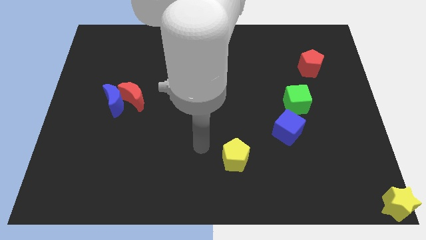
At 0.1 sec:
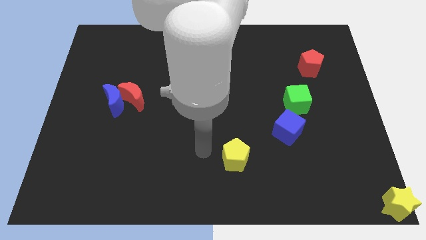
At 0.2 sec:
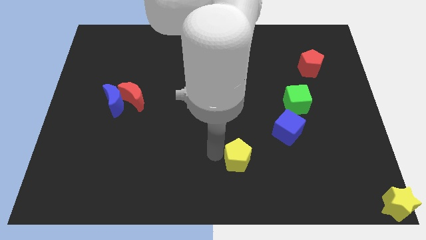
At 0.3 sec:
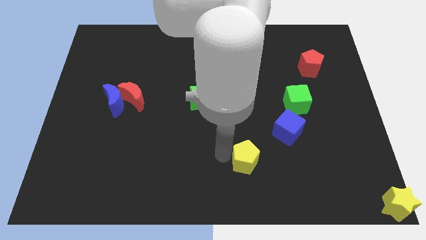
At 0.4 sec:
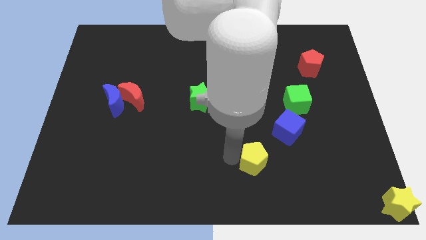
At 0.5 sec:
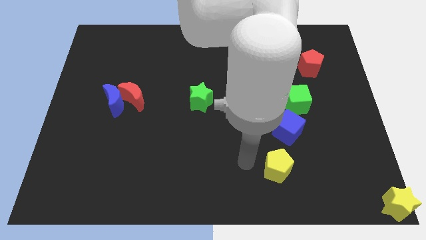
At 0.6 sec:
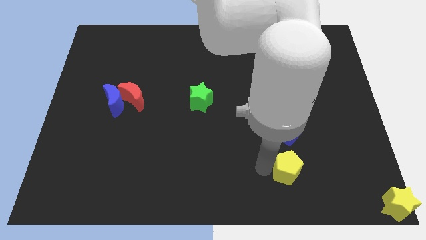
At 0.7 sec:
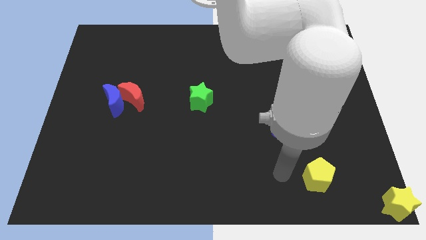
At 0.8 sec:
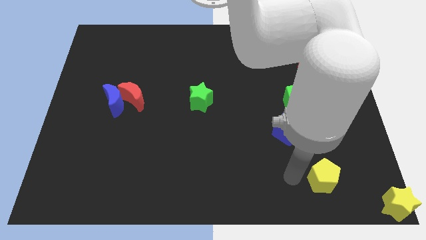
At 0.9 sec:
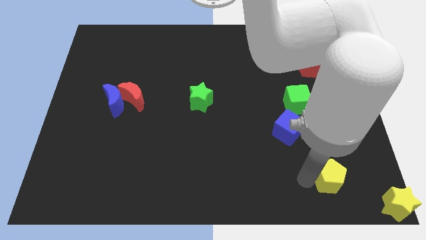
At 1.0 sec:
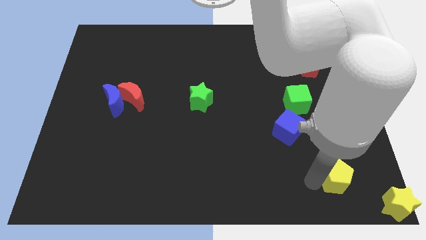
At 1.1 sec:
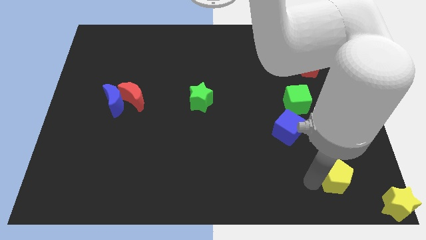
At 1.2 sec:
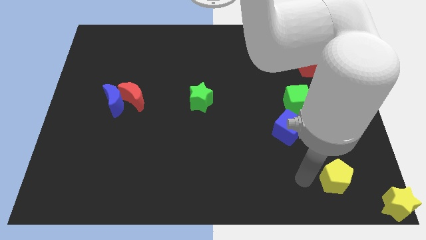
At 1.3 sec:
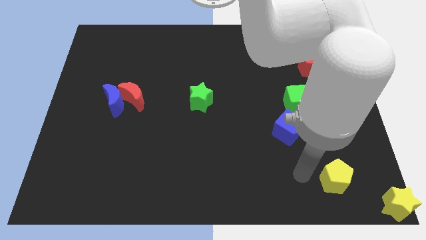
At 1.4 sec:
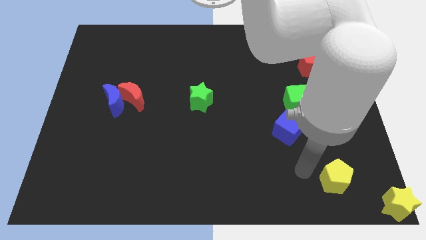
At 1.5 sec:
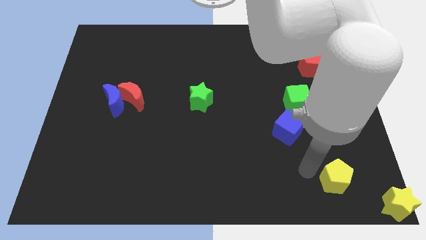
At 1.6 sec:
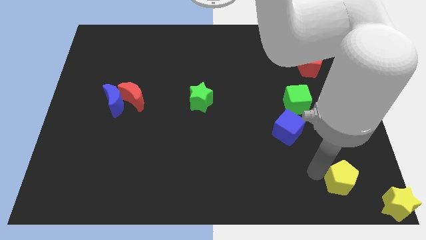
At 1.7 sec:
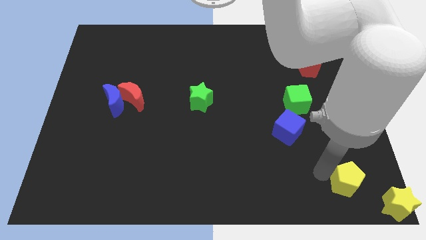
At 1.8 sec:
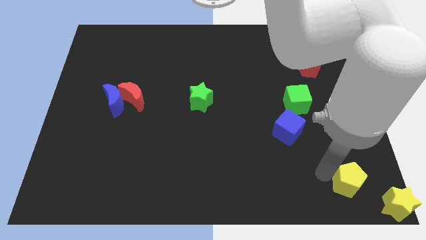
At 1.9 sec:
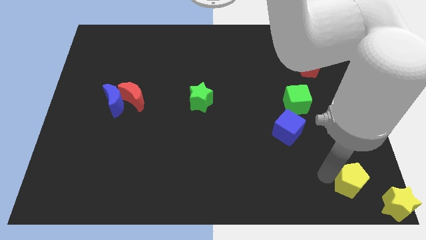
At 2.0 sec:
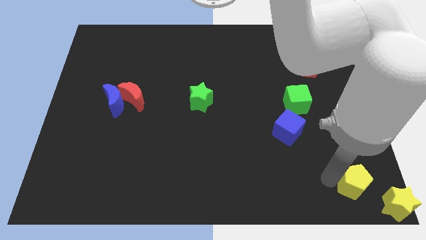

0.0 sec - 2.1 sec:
drag the yellow pentagon to the top left of yellow star

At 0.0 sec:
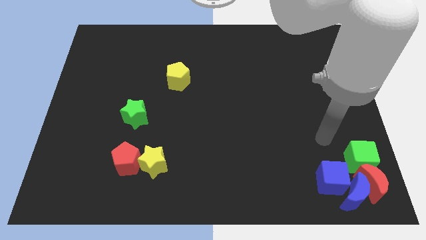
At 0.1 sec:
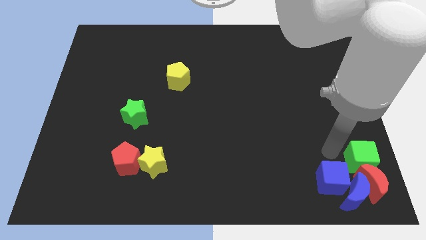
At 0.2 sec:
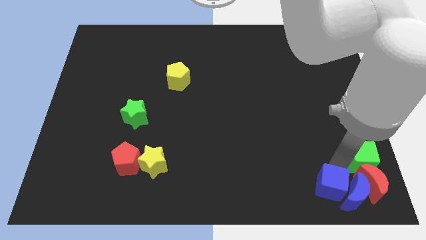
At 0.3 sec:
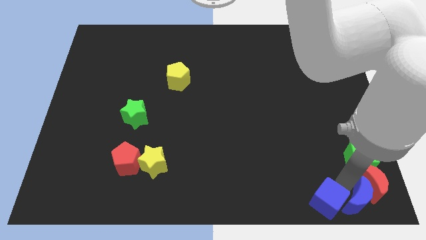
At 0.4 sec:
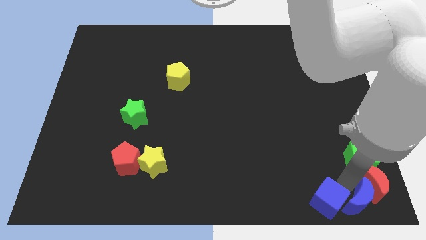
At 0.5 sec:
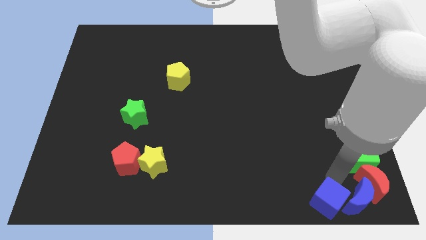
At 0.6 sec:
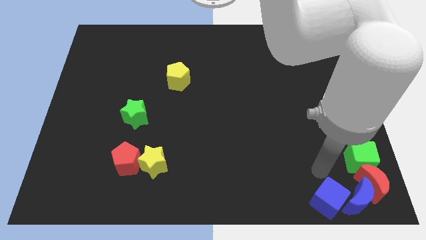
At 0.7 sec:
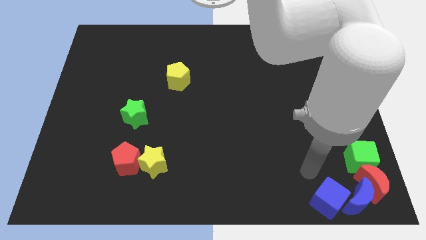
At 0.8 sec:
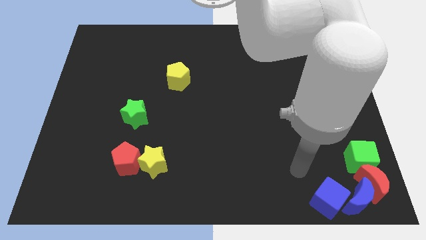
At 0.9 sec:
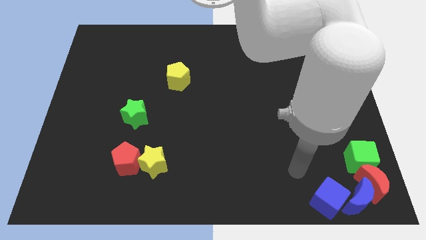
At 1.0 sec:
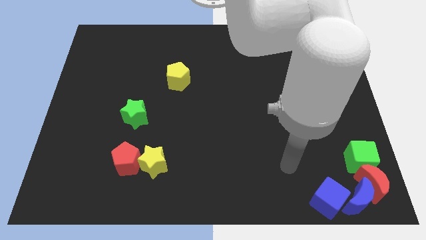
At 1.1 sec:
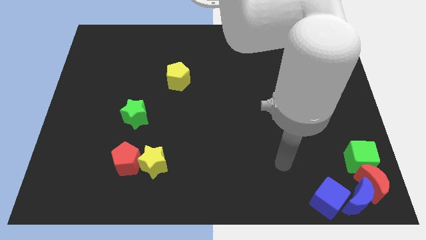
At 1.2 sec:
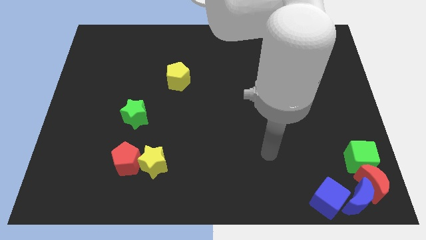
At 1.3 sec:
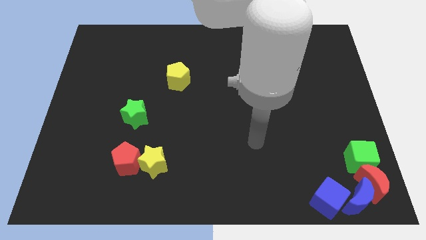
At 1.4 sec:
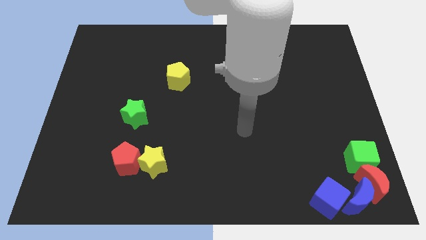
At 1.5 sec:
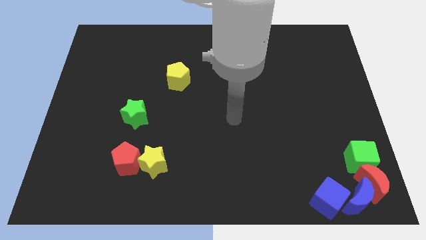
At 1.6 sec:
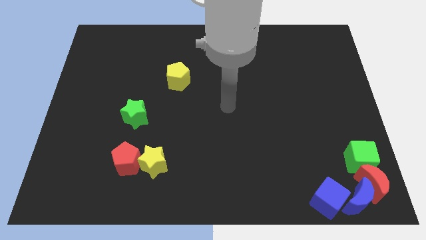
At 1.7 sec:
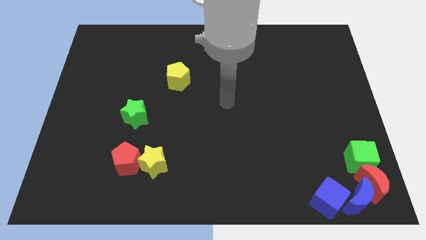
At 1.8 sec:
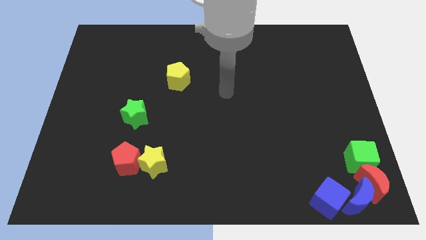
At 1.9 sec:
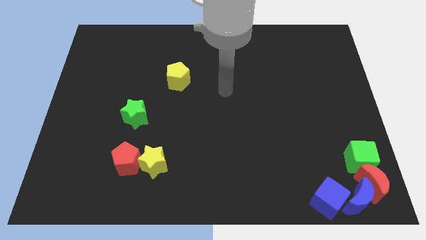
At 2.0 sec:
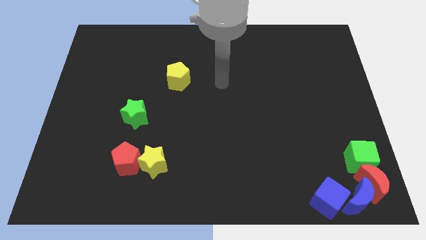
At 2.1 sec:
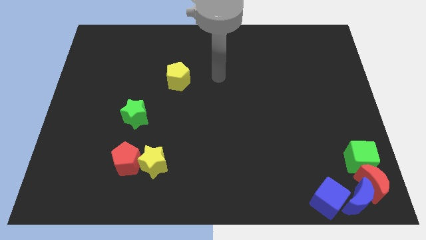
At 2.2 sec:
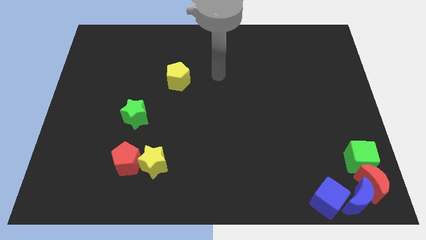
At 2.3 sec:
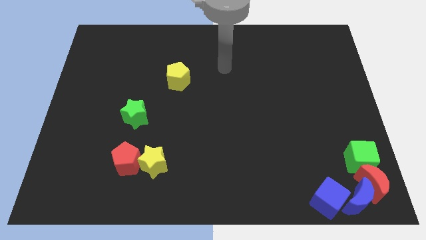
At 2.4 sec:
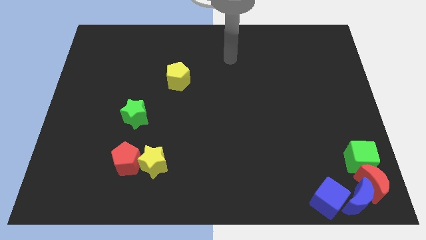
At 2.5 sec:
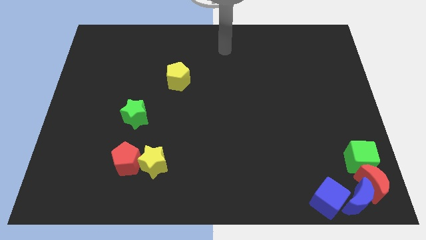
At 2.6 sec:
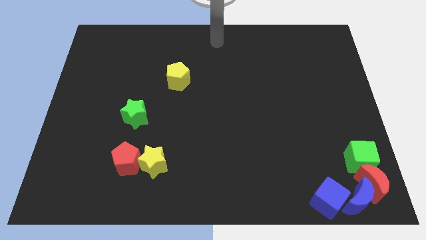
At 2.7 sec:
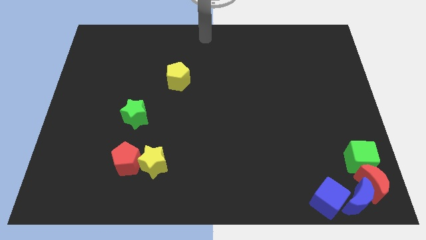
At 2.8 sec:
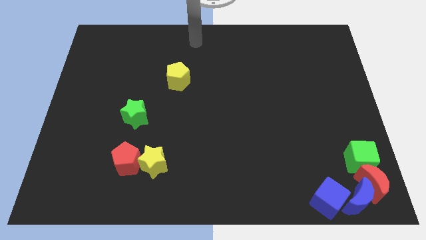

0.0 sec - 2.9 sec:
move your arm to the top center of the board

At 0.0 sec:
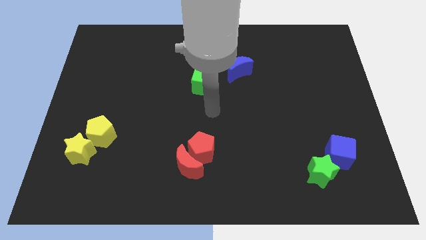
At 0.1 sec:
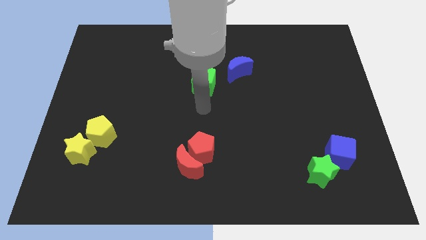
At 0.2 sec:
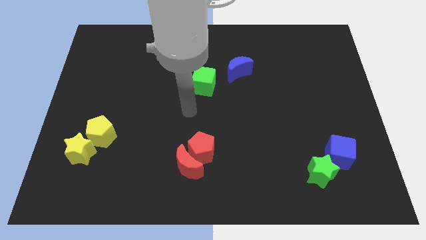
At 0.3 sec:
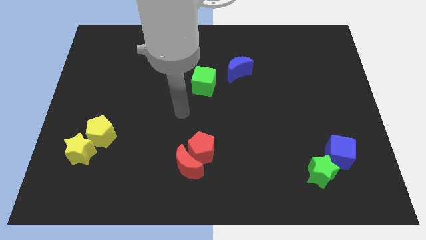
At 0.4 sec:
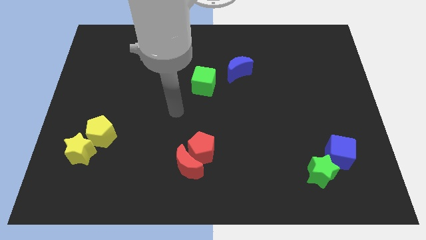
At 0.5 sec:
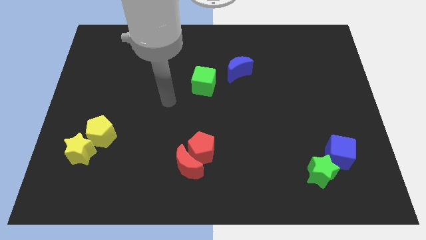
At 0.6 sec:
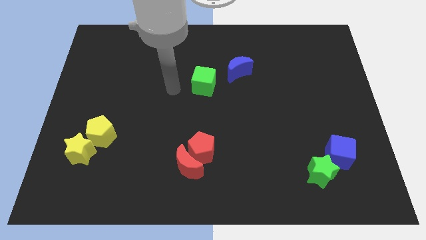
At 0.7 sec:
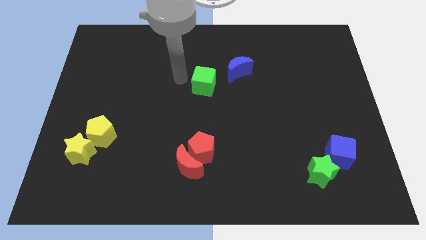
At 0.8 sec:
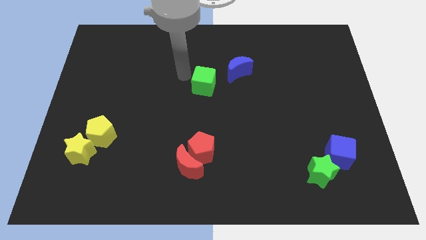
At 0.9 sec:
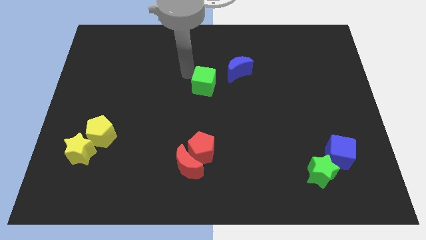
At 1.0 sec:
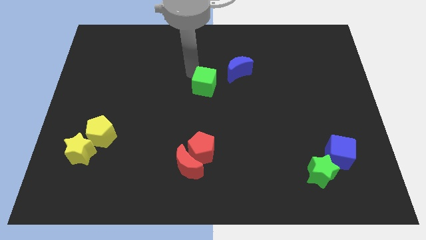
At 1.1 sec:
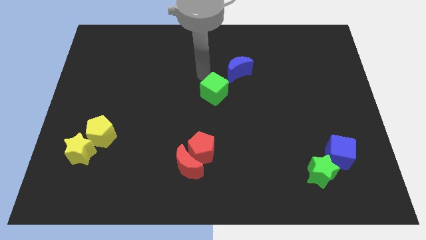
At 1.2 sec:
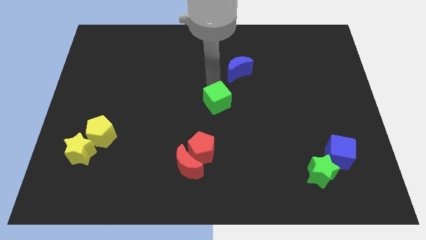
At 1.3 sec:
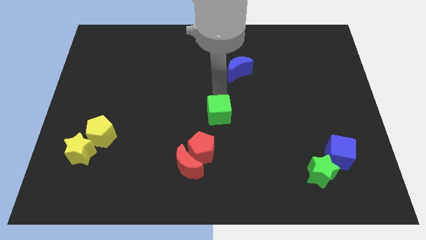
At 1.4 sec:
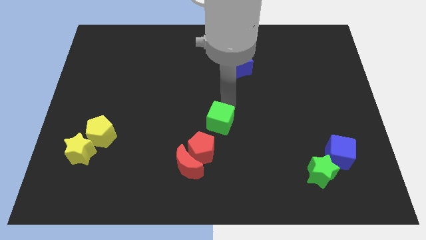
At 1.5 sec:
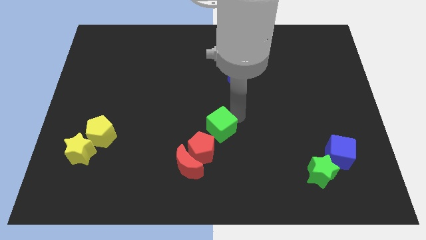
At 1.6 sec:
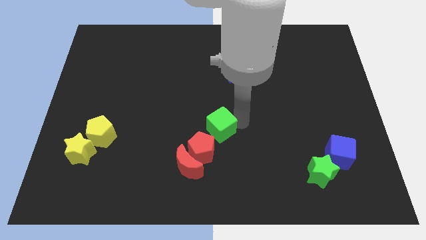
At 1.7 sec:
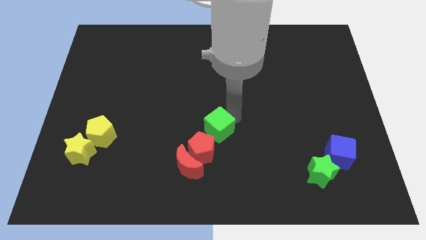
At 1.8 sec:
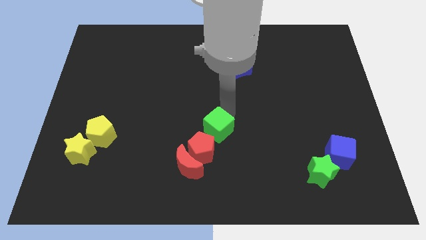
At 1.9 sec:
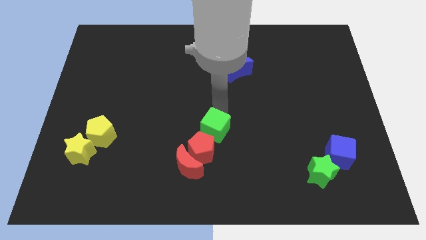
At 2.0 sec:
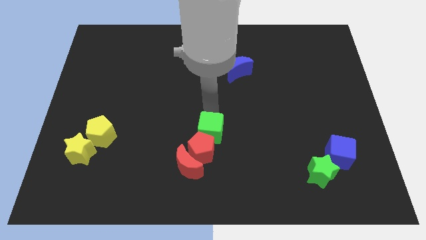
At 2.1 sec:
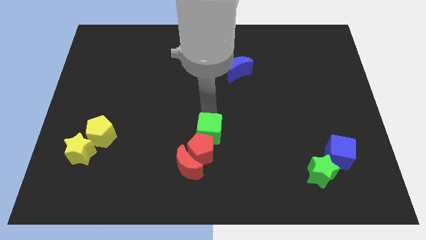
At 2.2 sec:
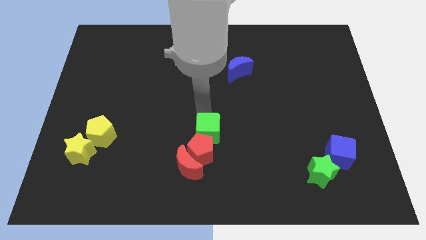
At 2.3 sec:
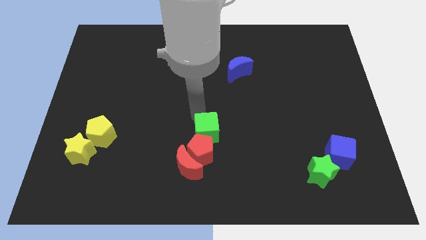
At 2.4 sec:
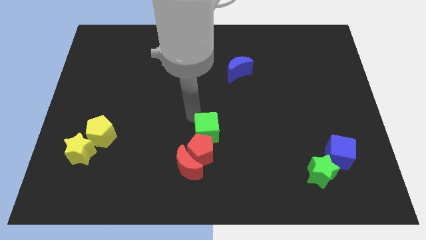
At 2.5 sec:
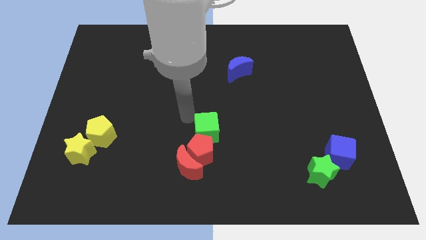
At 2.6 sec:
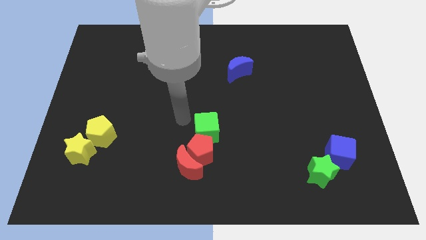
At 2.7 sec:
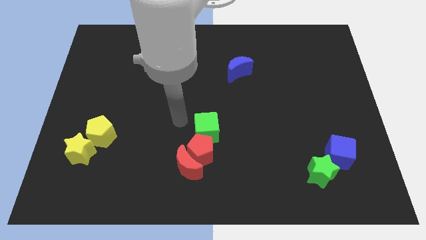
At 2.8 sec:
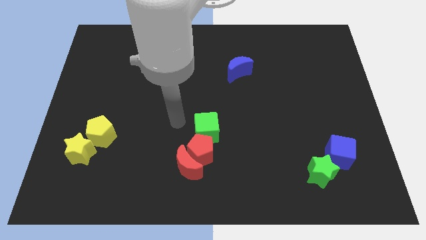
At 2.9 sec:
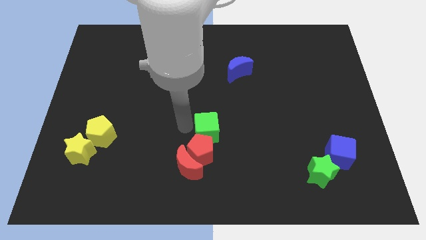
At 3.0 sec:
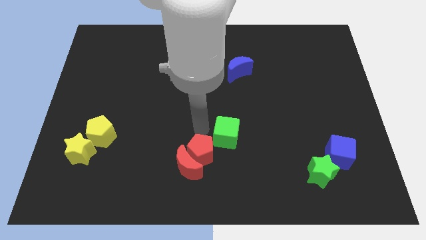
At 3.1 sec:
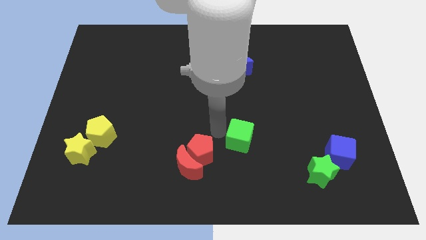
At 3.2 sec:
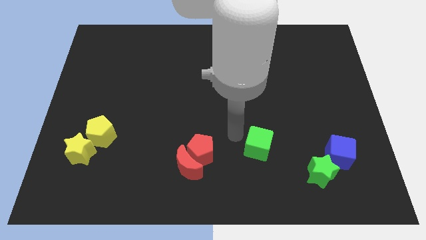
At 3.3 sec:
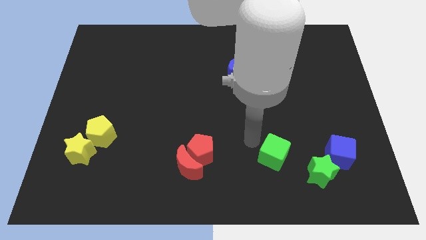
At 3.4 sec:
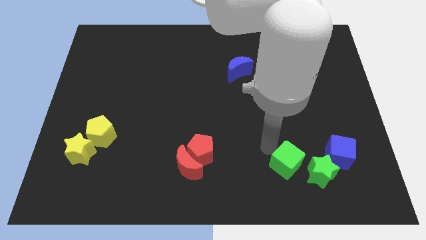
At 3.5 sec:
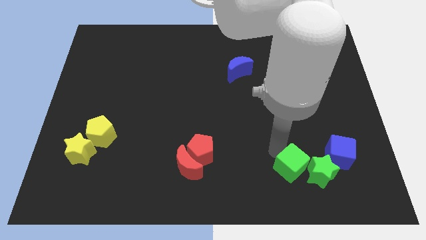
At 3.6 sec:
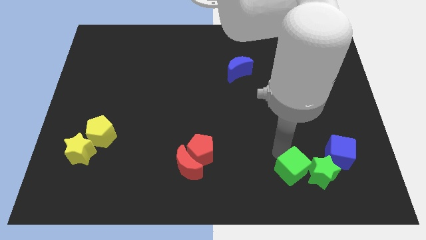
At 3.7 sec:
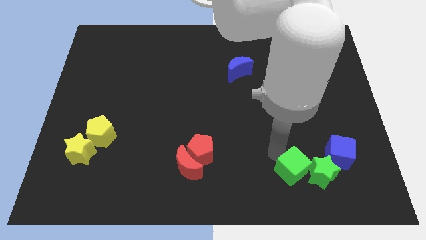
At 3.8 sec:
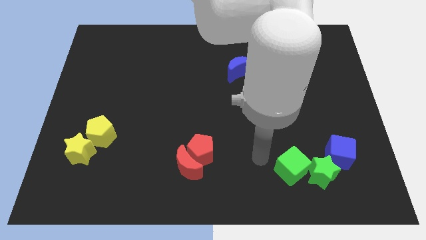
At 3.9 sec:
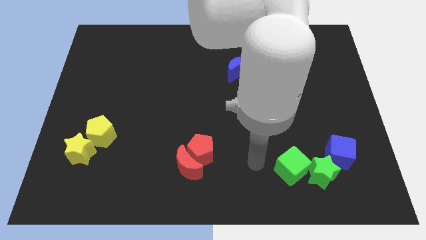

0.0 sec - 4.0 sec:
slide the green cube to the left side of the green star
